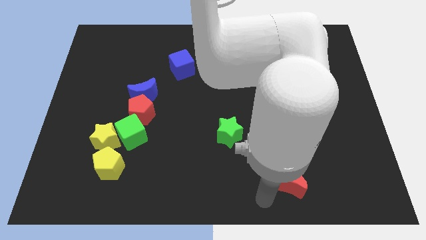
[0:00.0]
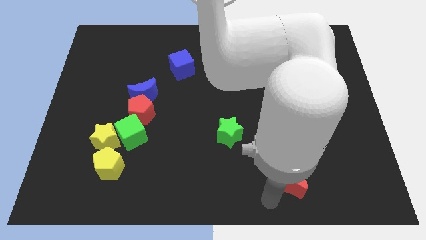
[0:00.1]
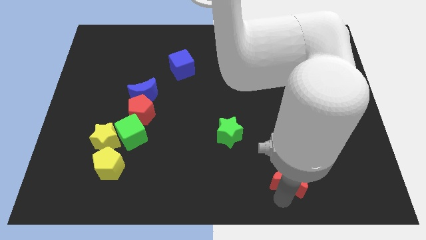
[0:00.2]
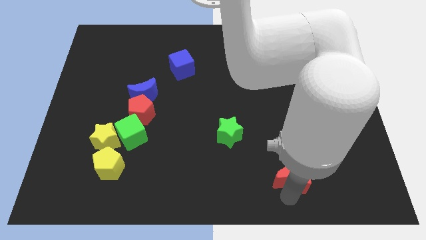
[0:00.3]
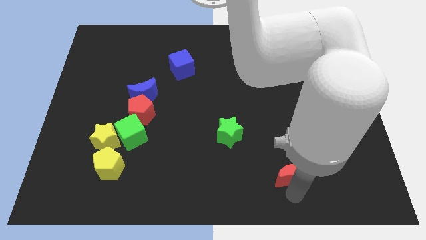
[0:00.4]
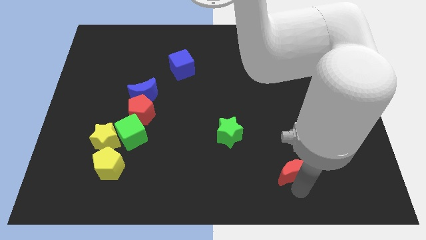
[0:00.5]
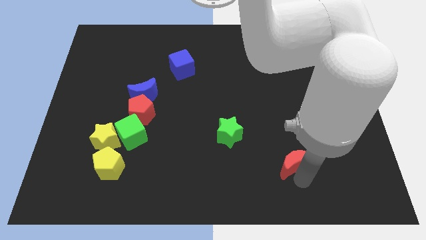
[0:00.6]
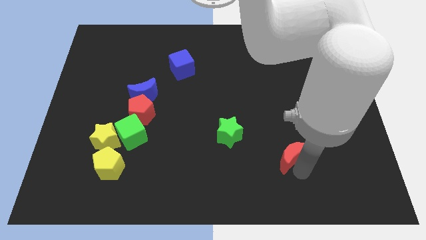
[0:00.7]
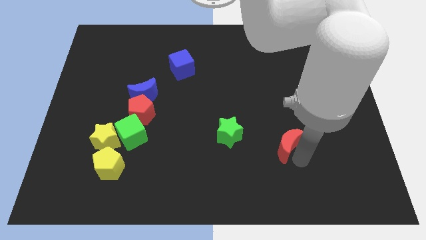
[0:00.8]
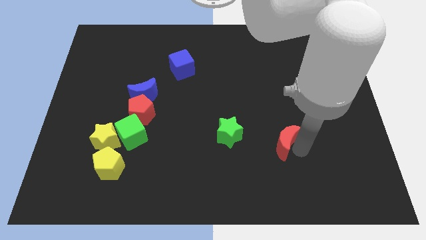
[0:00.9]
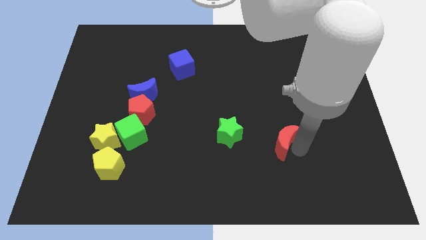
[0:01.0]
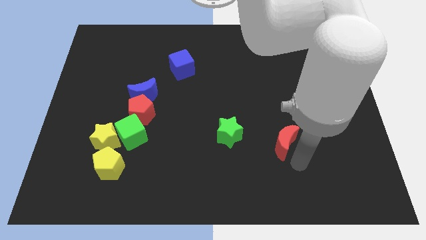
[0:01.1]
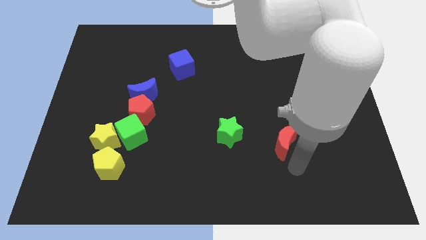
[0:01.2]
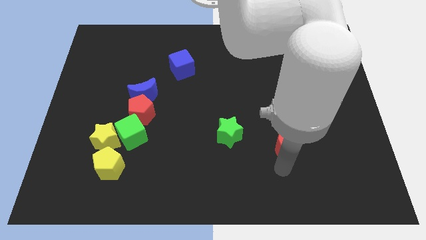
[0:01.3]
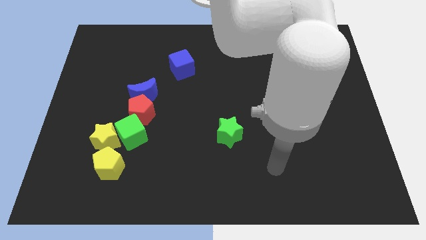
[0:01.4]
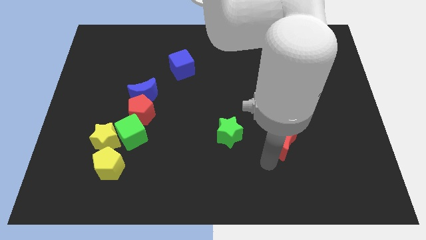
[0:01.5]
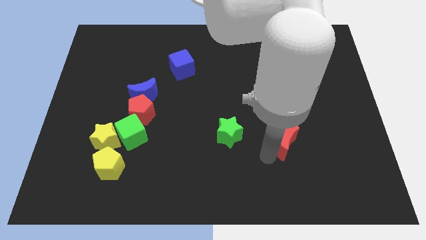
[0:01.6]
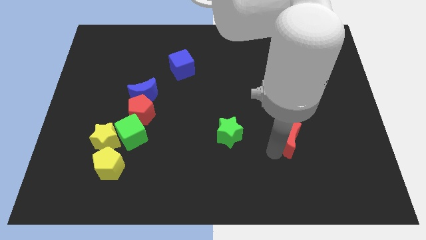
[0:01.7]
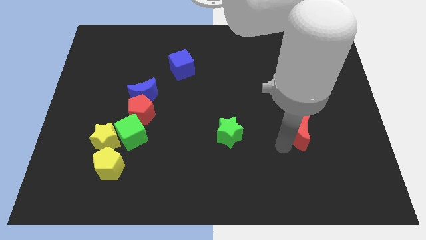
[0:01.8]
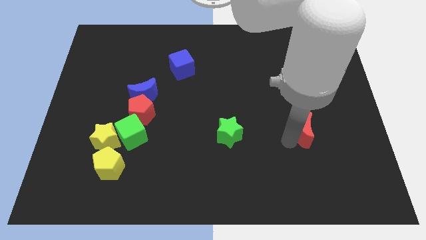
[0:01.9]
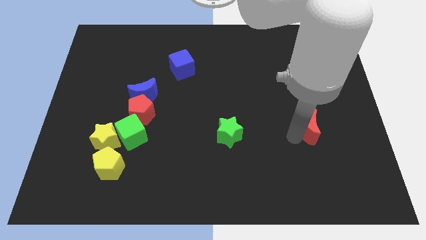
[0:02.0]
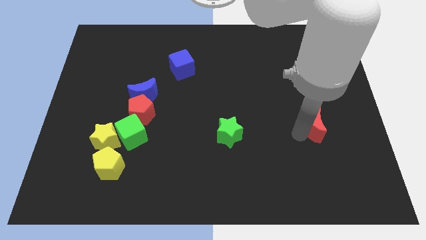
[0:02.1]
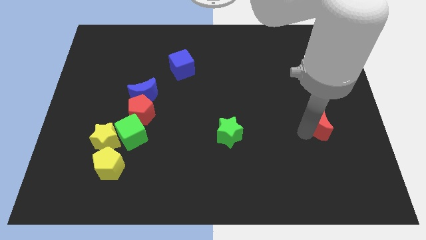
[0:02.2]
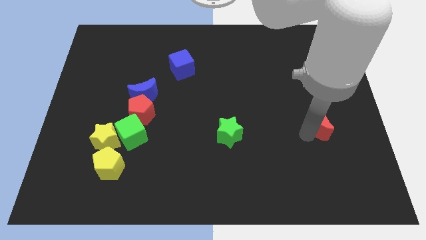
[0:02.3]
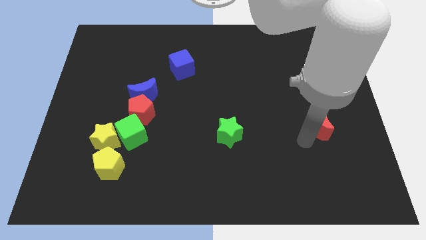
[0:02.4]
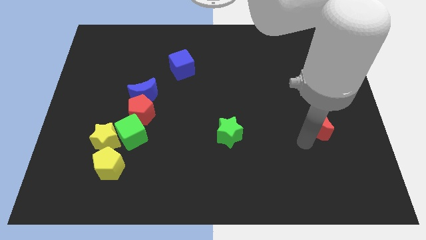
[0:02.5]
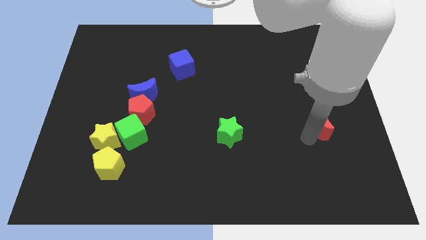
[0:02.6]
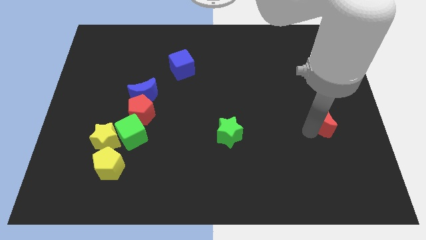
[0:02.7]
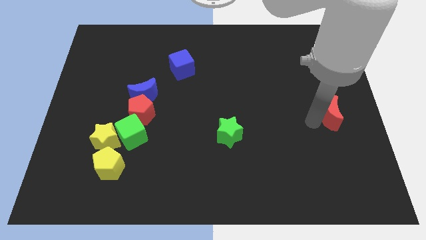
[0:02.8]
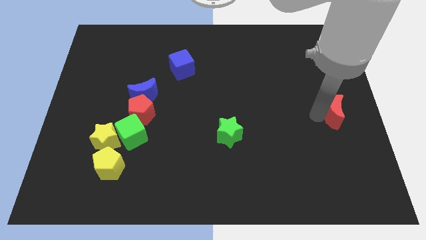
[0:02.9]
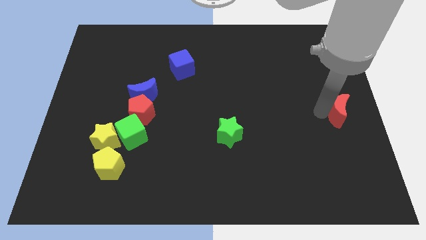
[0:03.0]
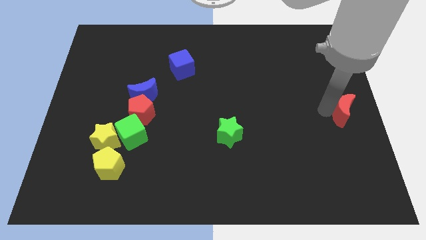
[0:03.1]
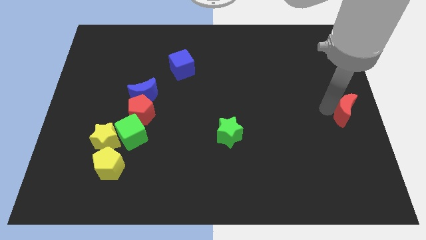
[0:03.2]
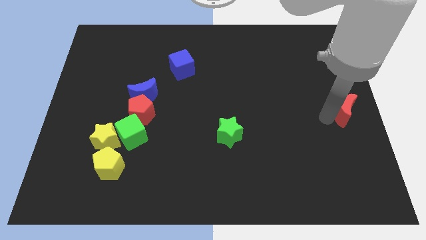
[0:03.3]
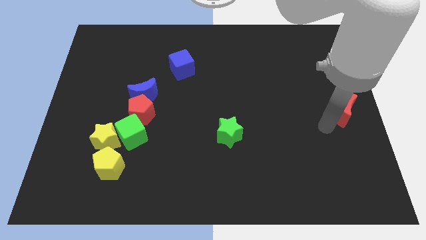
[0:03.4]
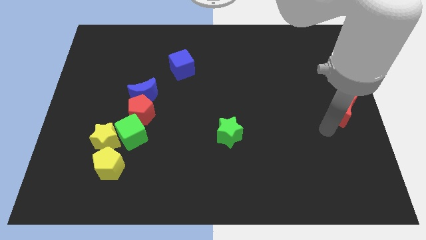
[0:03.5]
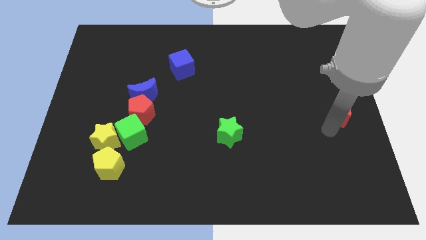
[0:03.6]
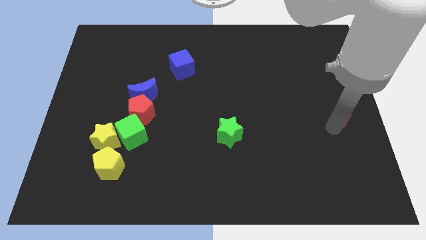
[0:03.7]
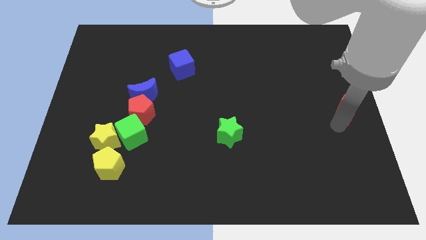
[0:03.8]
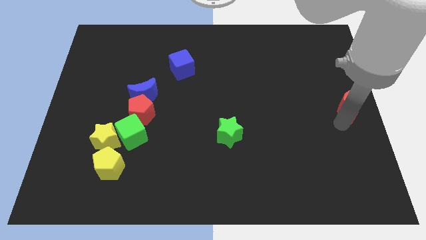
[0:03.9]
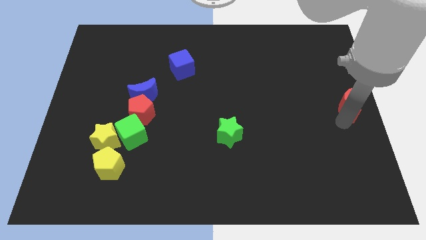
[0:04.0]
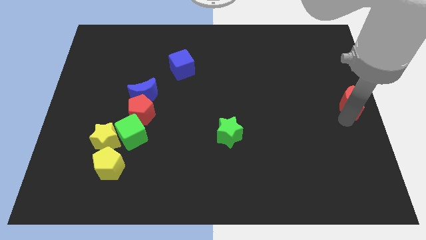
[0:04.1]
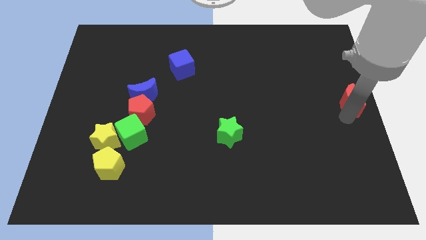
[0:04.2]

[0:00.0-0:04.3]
push red moon towards middle right of the board

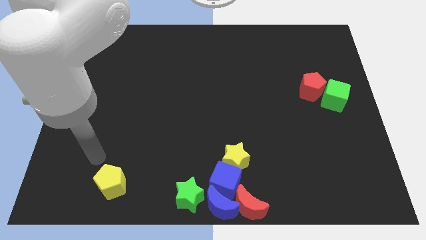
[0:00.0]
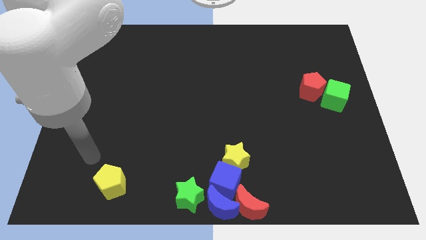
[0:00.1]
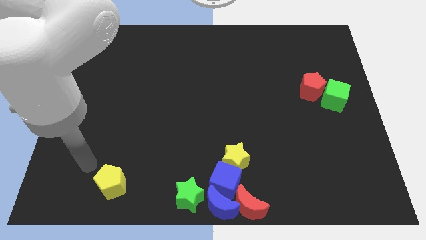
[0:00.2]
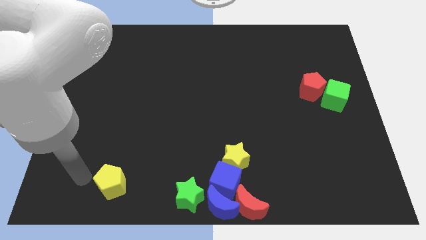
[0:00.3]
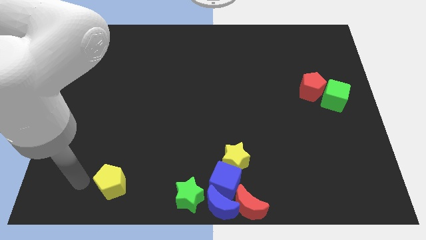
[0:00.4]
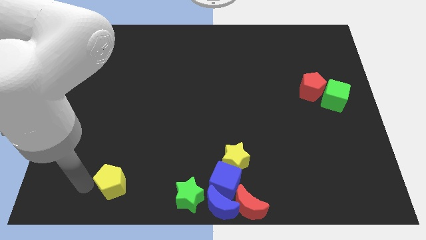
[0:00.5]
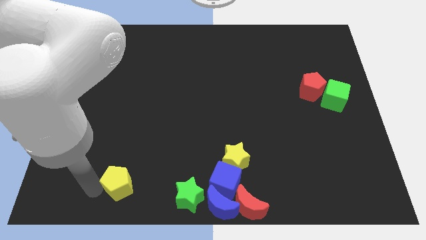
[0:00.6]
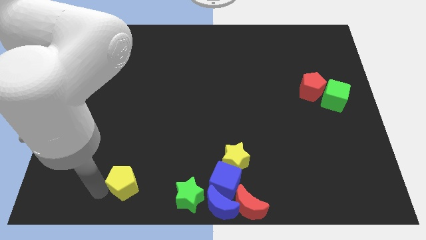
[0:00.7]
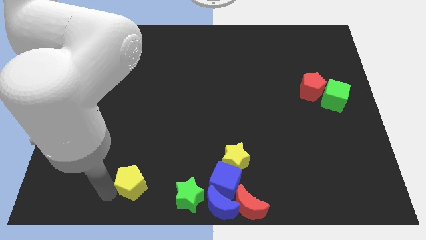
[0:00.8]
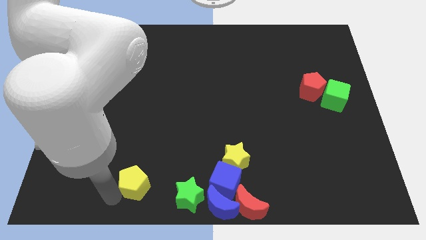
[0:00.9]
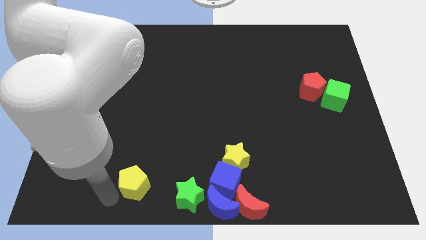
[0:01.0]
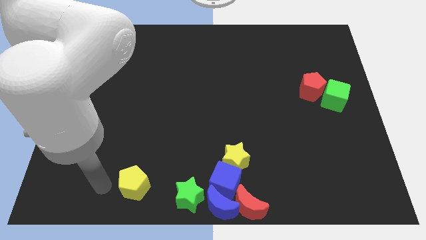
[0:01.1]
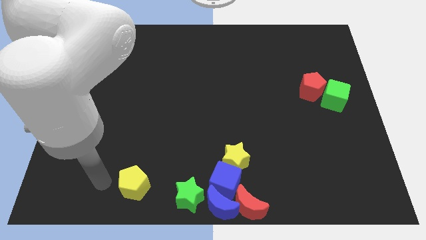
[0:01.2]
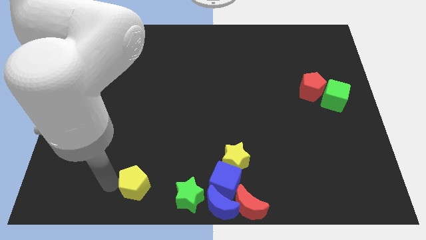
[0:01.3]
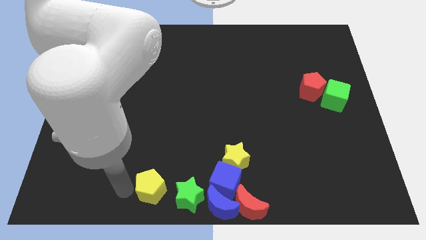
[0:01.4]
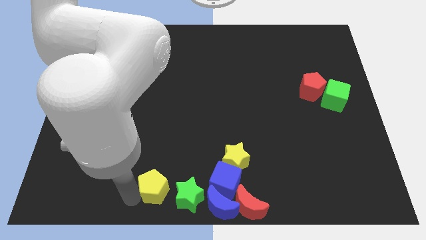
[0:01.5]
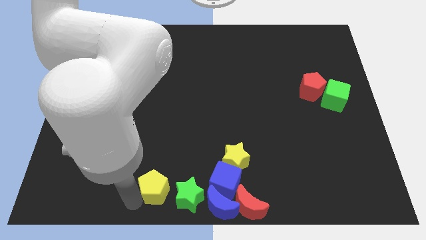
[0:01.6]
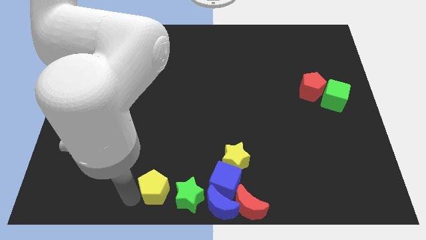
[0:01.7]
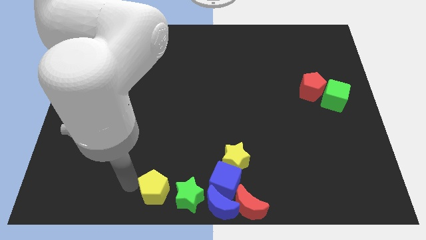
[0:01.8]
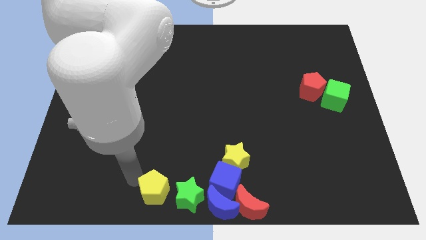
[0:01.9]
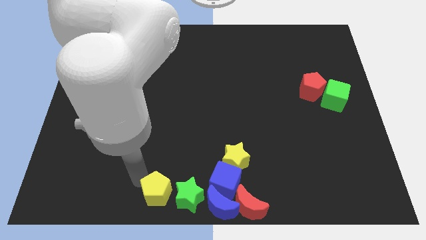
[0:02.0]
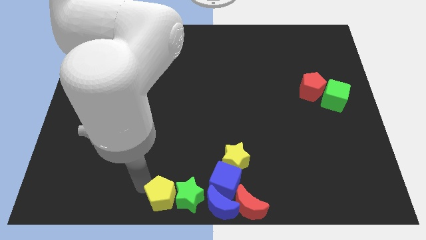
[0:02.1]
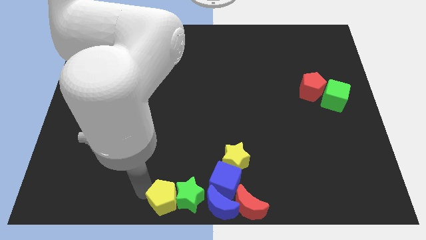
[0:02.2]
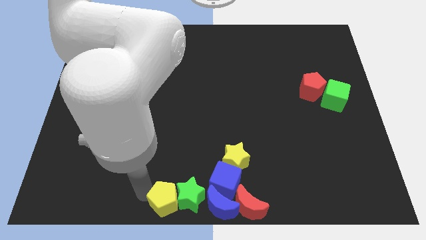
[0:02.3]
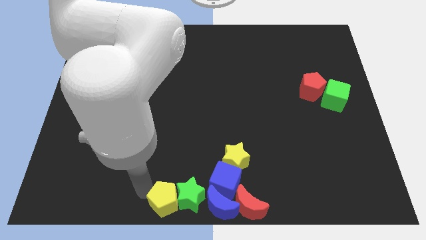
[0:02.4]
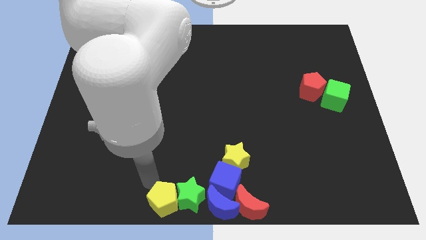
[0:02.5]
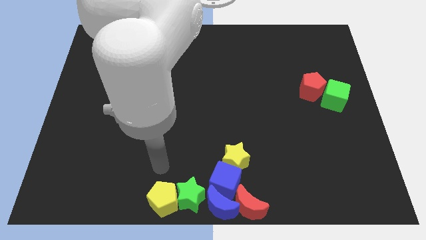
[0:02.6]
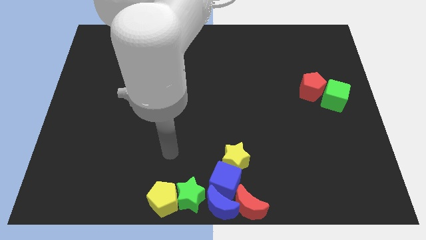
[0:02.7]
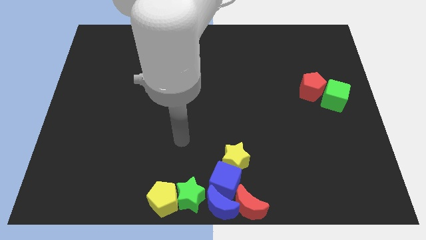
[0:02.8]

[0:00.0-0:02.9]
place the yellow pentagon into green star to the left

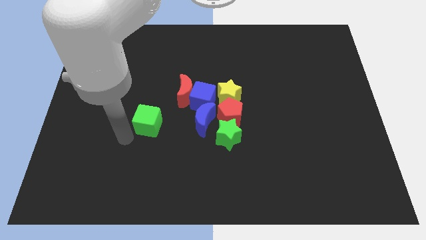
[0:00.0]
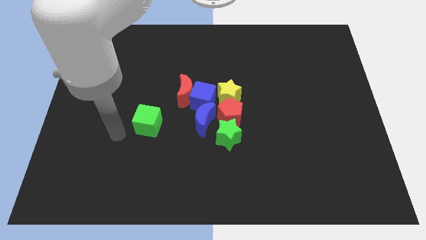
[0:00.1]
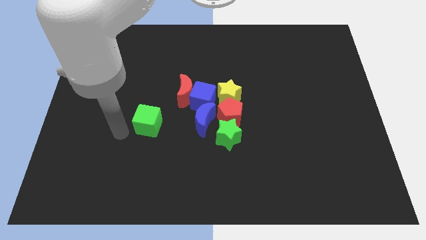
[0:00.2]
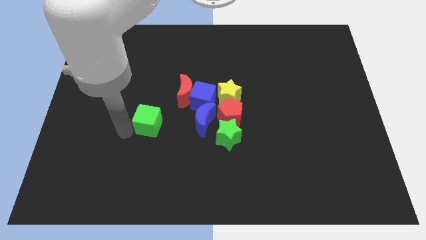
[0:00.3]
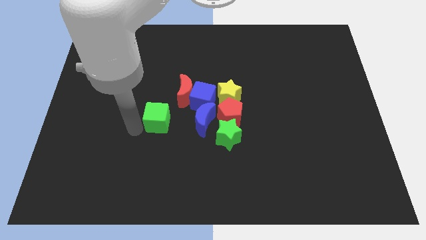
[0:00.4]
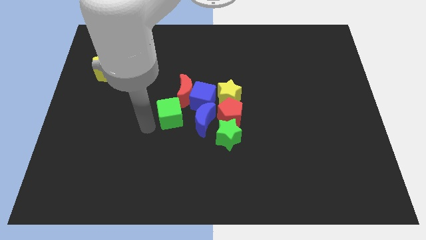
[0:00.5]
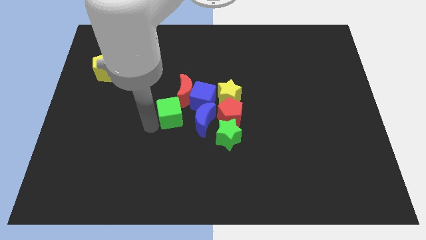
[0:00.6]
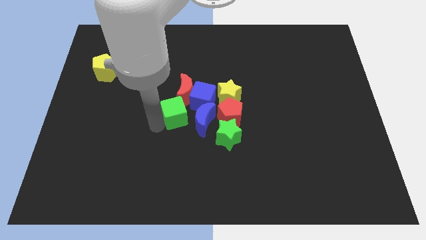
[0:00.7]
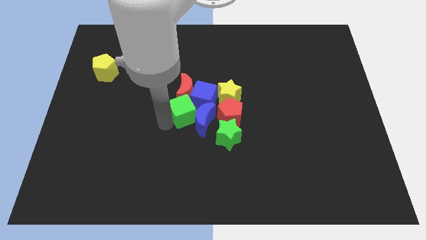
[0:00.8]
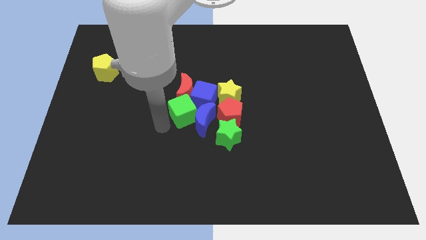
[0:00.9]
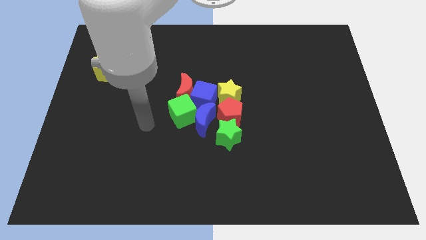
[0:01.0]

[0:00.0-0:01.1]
push green cube into blue blocks

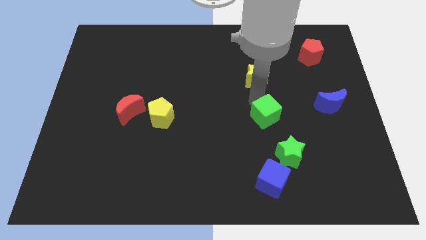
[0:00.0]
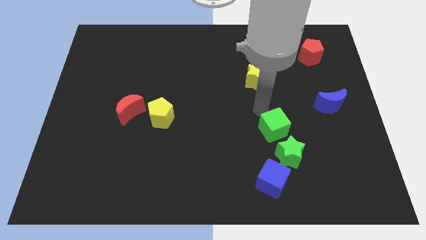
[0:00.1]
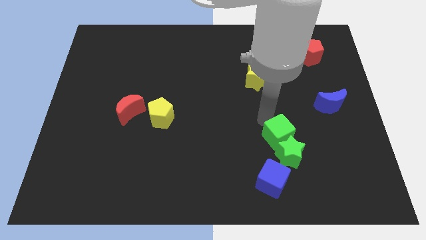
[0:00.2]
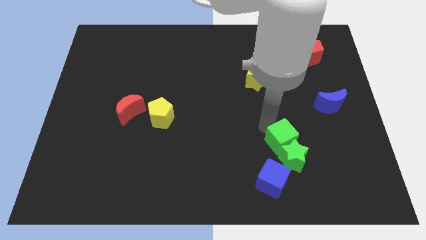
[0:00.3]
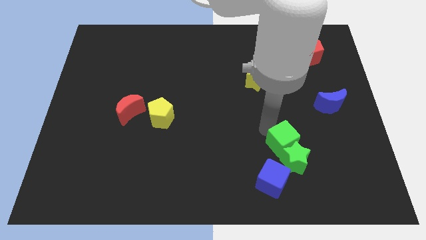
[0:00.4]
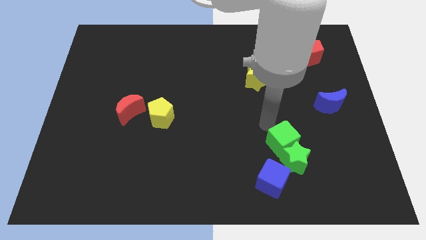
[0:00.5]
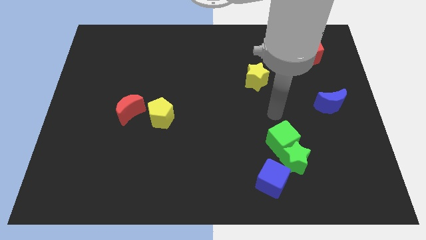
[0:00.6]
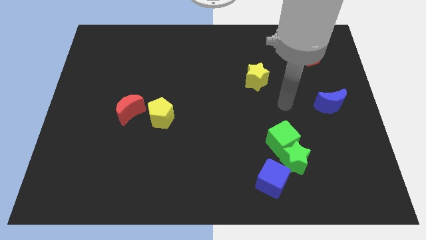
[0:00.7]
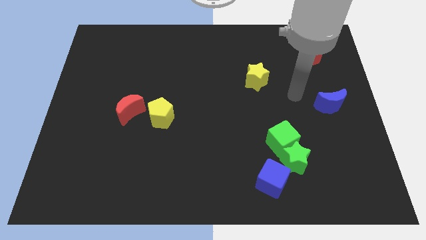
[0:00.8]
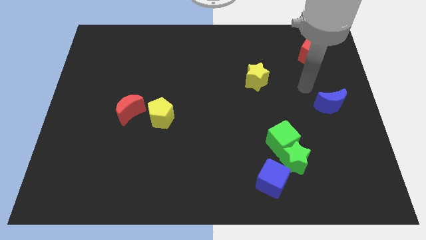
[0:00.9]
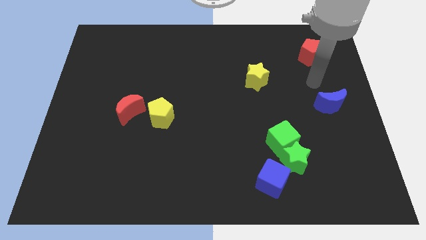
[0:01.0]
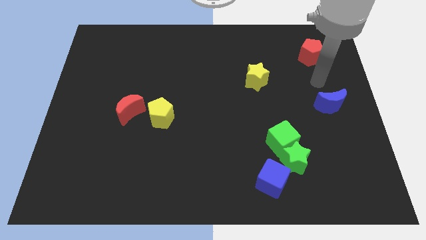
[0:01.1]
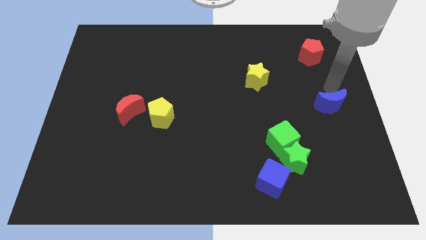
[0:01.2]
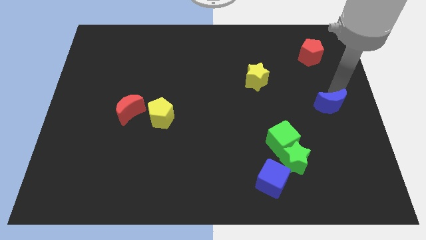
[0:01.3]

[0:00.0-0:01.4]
push the green cube into the green star
